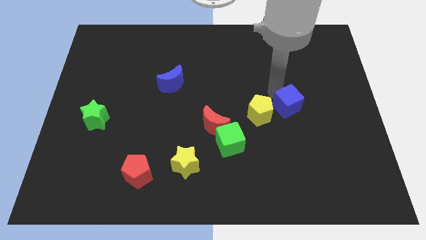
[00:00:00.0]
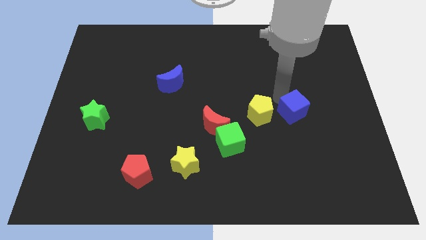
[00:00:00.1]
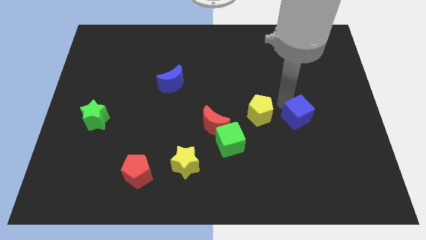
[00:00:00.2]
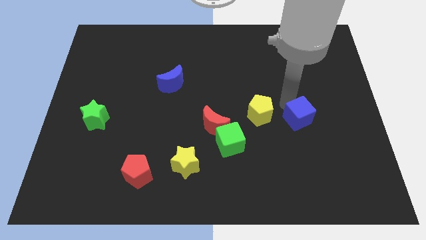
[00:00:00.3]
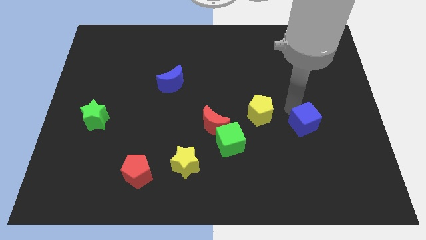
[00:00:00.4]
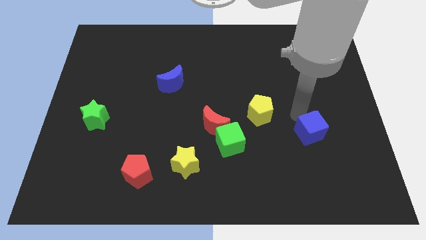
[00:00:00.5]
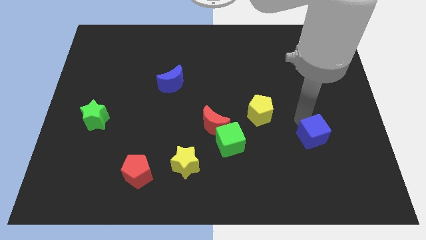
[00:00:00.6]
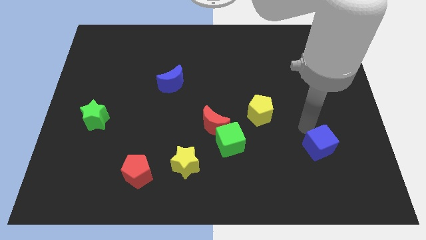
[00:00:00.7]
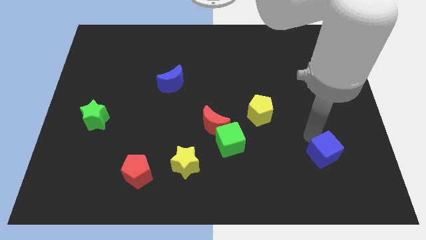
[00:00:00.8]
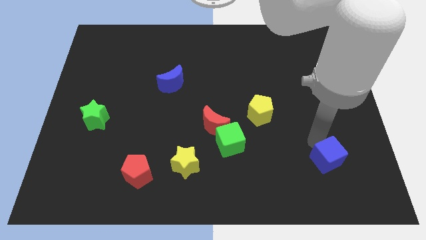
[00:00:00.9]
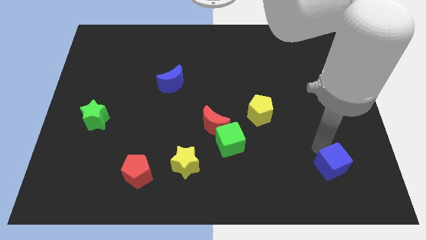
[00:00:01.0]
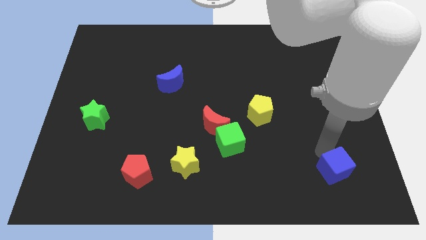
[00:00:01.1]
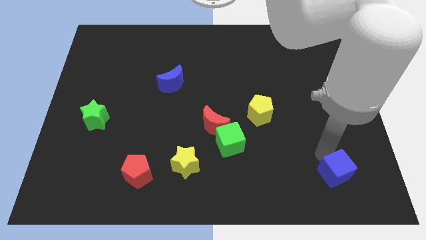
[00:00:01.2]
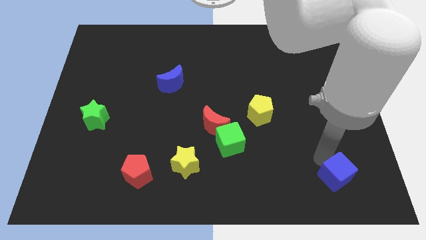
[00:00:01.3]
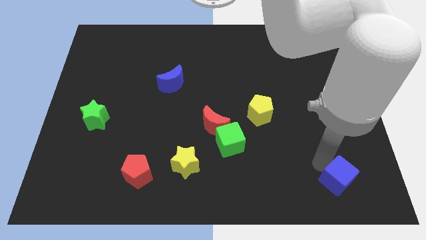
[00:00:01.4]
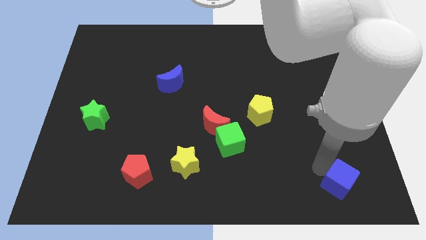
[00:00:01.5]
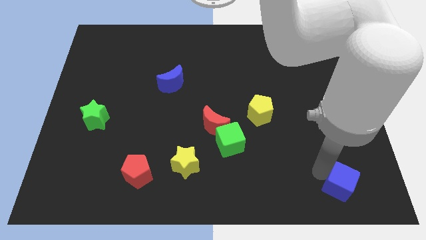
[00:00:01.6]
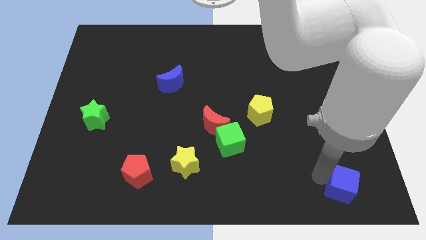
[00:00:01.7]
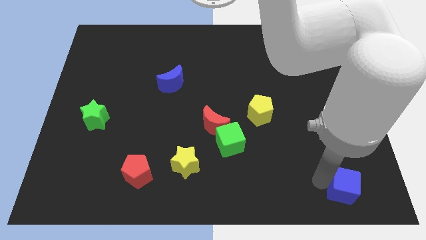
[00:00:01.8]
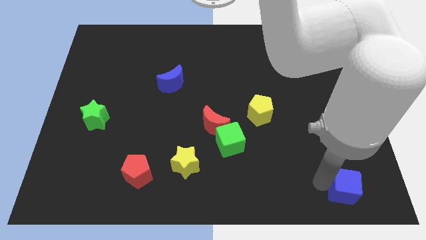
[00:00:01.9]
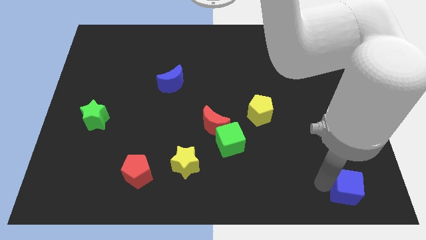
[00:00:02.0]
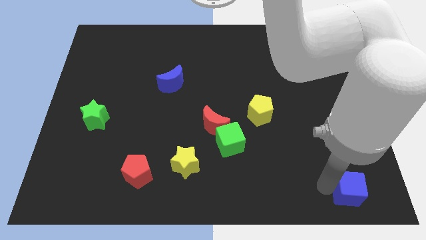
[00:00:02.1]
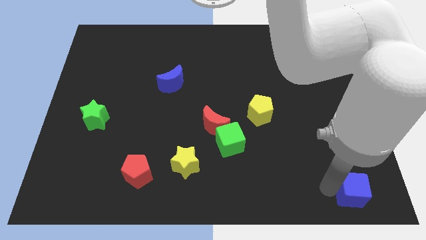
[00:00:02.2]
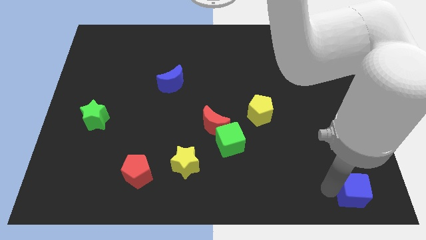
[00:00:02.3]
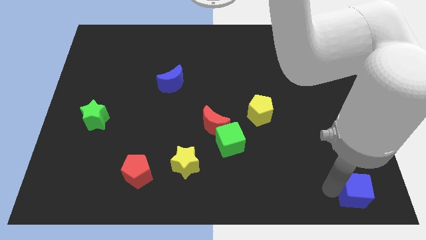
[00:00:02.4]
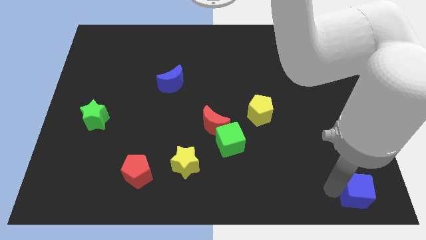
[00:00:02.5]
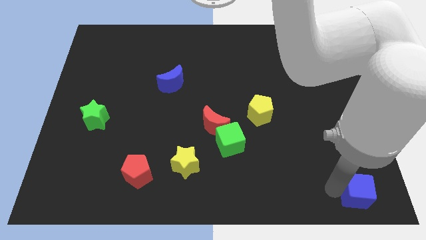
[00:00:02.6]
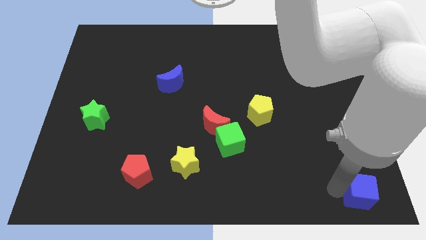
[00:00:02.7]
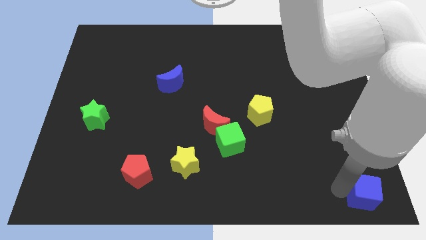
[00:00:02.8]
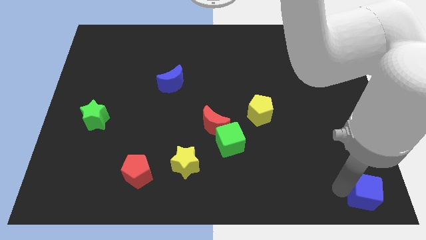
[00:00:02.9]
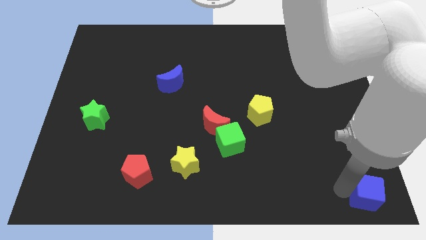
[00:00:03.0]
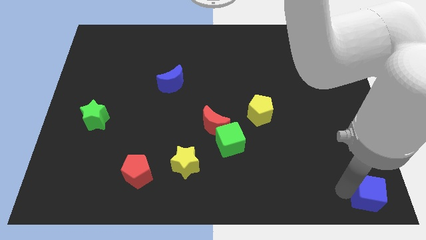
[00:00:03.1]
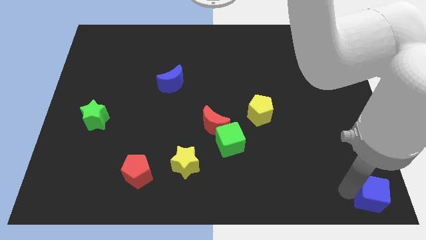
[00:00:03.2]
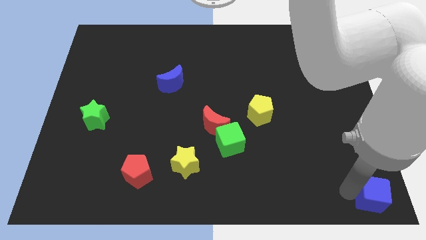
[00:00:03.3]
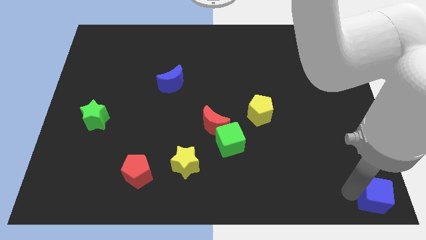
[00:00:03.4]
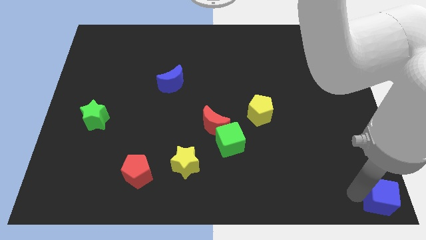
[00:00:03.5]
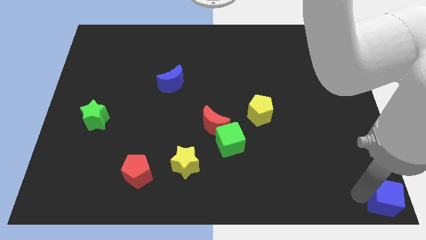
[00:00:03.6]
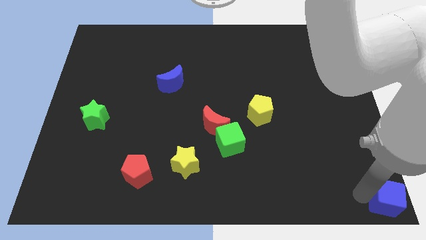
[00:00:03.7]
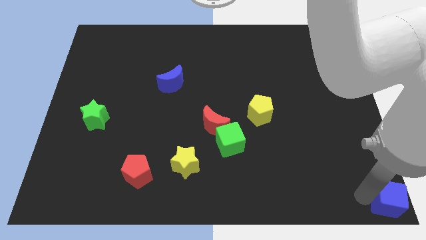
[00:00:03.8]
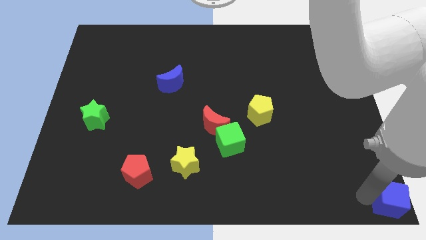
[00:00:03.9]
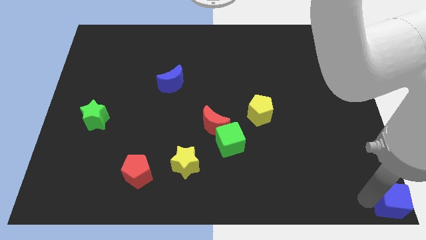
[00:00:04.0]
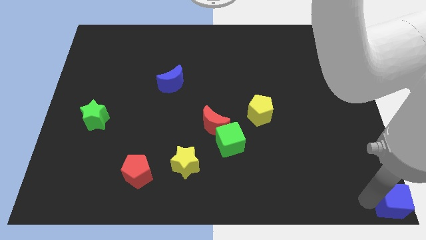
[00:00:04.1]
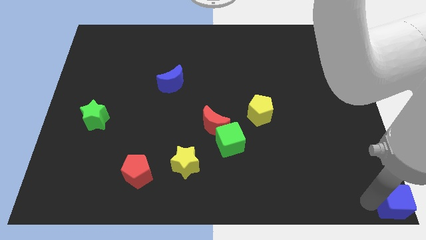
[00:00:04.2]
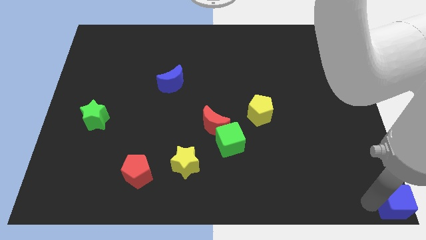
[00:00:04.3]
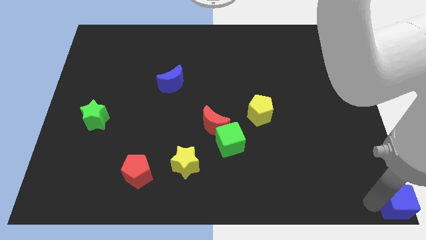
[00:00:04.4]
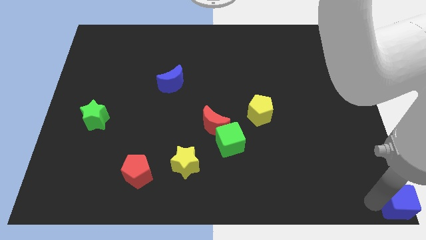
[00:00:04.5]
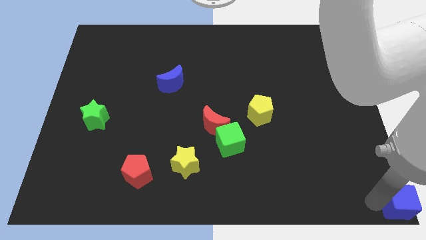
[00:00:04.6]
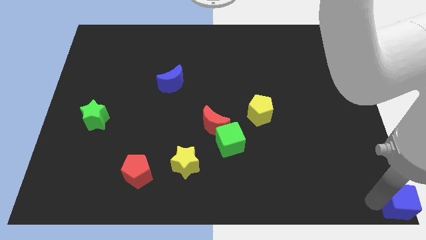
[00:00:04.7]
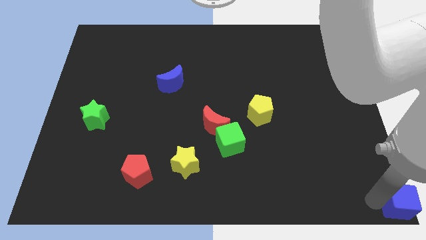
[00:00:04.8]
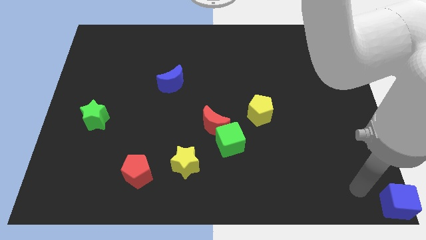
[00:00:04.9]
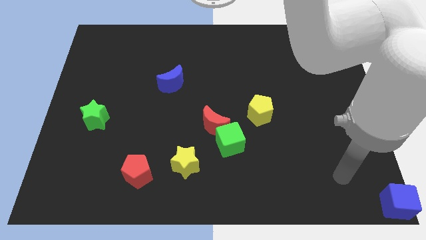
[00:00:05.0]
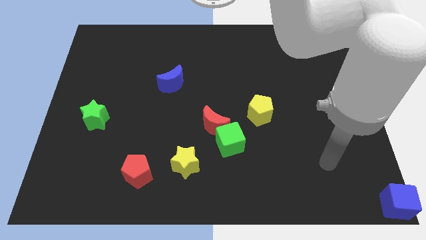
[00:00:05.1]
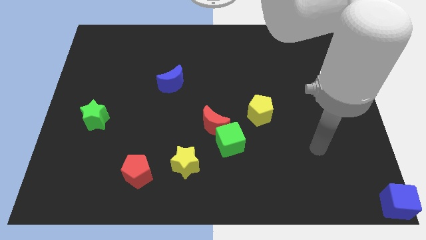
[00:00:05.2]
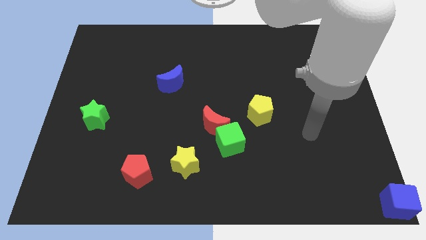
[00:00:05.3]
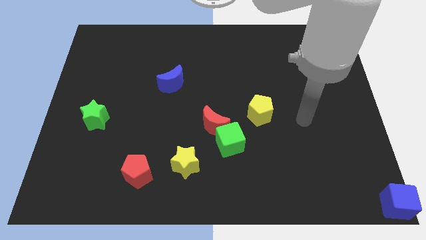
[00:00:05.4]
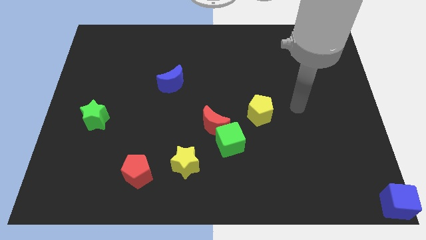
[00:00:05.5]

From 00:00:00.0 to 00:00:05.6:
push the blue cube to the bottom right corner of the board

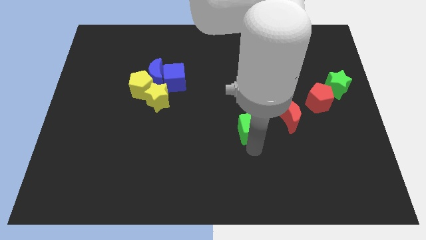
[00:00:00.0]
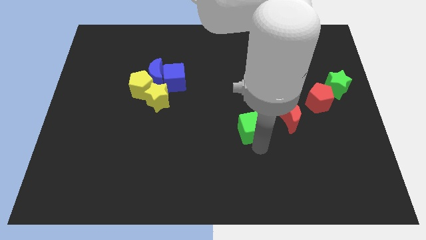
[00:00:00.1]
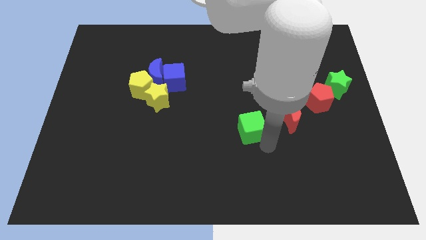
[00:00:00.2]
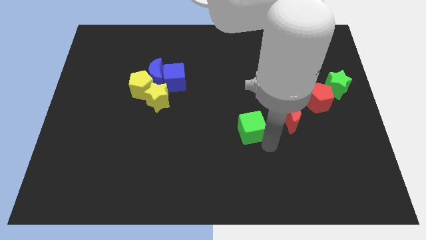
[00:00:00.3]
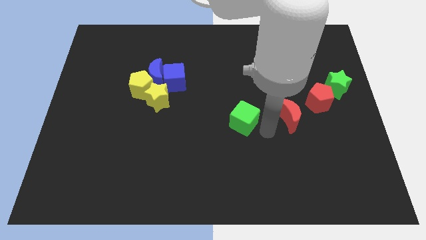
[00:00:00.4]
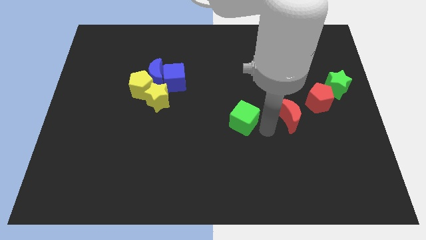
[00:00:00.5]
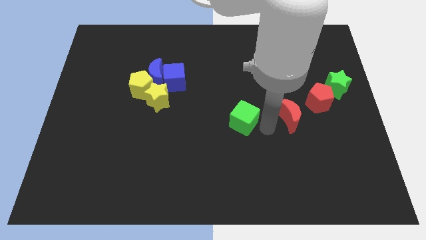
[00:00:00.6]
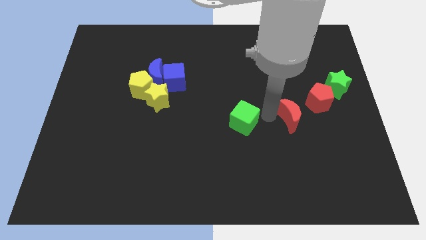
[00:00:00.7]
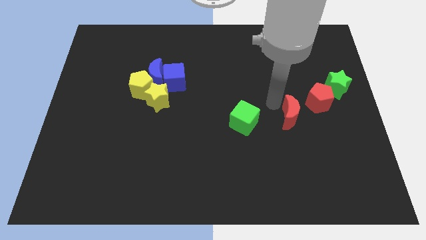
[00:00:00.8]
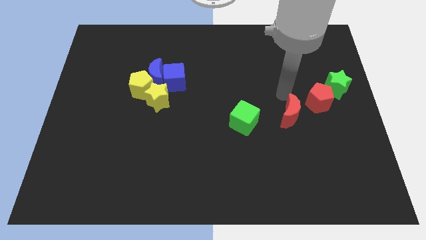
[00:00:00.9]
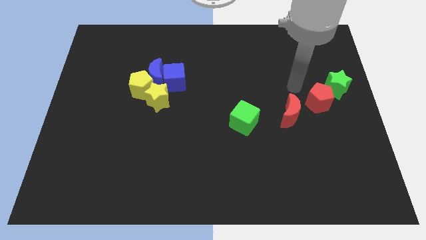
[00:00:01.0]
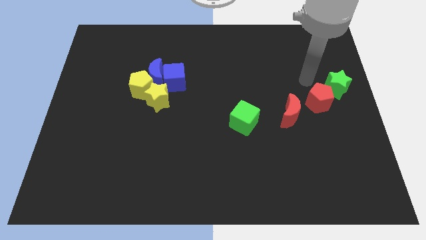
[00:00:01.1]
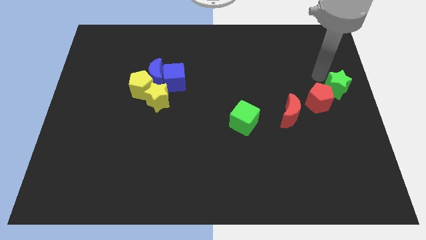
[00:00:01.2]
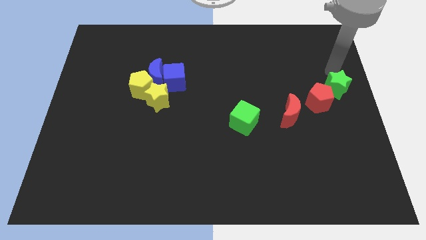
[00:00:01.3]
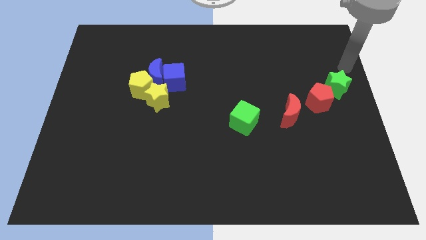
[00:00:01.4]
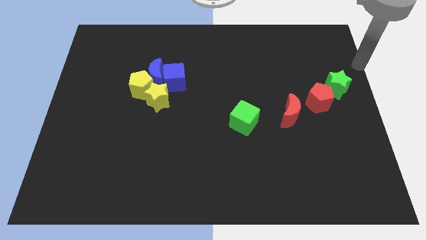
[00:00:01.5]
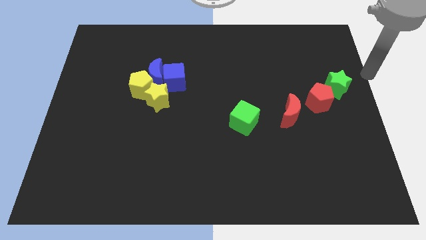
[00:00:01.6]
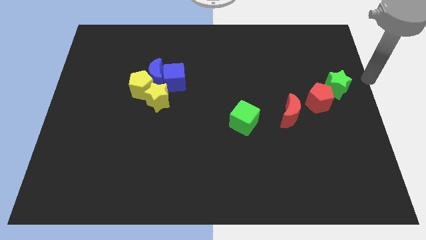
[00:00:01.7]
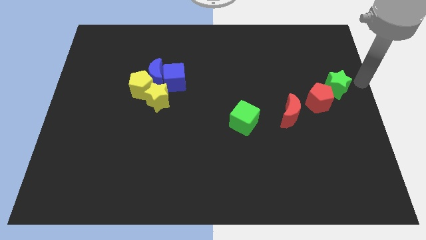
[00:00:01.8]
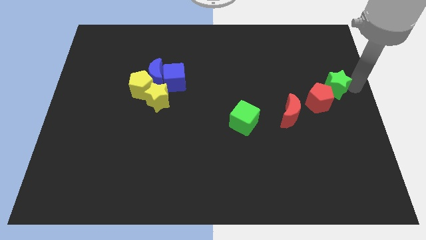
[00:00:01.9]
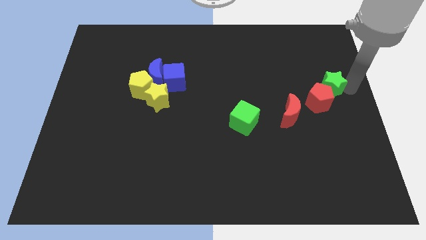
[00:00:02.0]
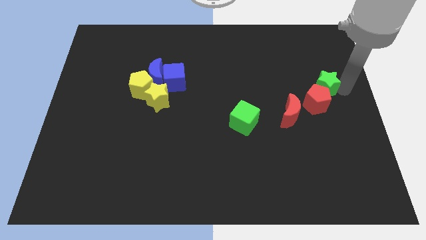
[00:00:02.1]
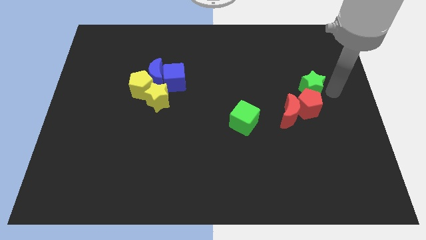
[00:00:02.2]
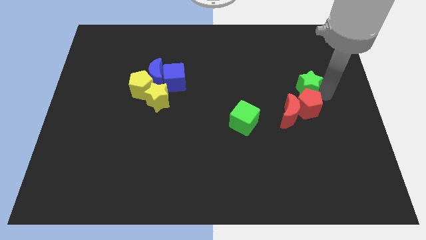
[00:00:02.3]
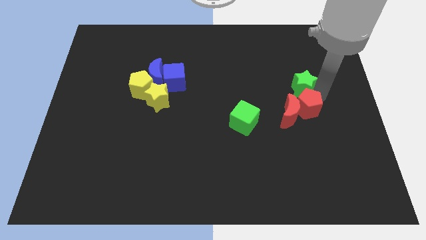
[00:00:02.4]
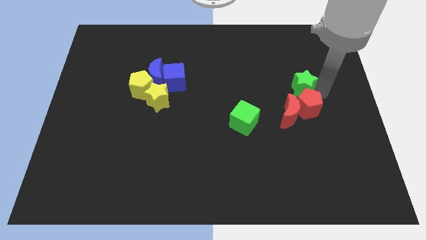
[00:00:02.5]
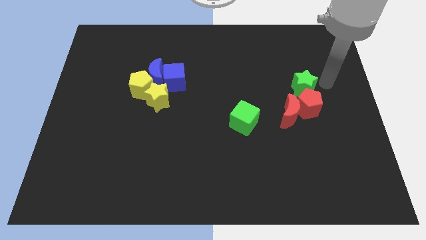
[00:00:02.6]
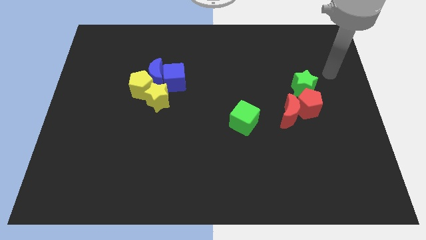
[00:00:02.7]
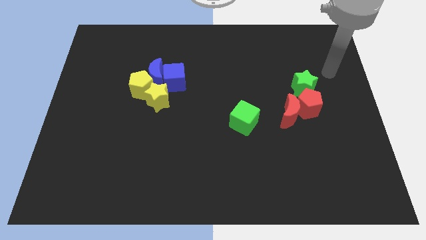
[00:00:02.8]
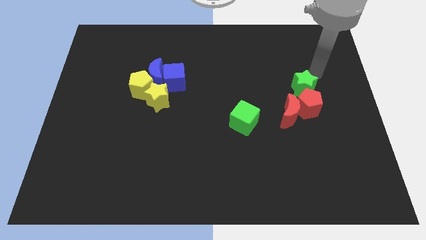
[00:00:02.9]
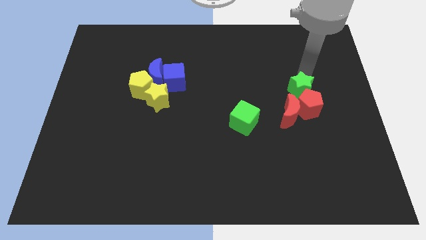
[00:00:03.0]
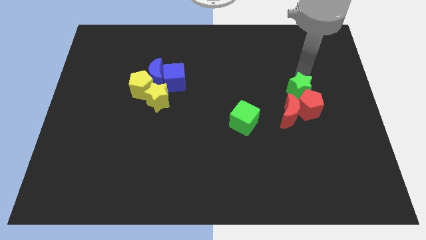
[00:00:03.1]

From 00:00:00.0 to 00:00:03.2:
place the green star above the red pentagon

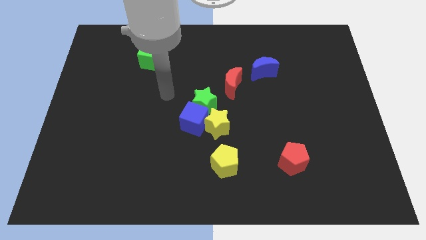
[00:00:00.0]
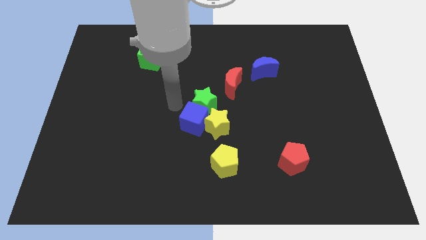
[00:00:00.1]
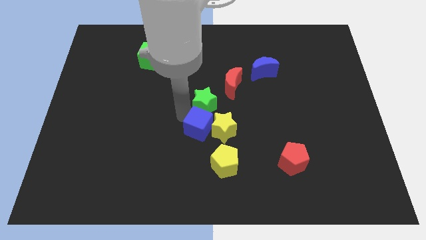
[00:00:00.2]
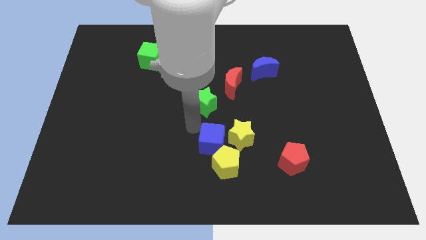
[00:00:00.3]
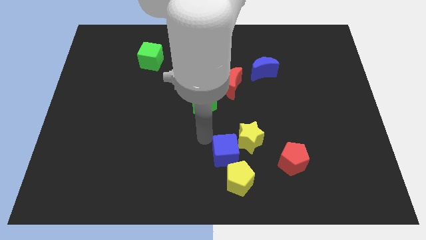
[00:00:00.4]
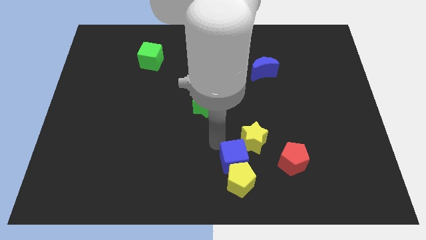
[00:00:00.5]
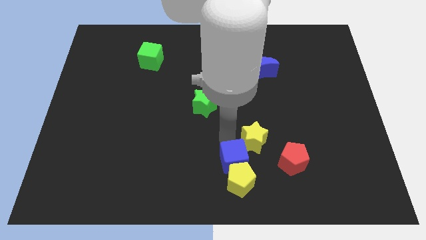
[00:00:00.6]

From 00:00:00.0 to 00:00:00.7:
push blue cube in to yellow pentagon
